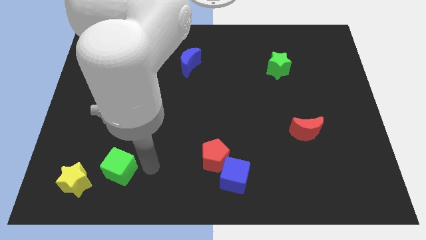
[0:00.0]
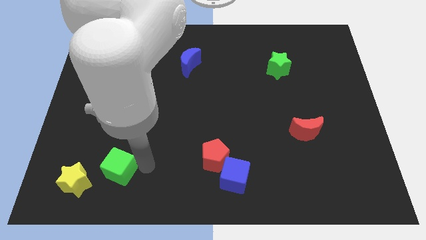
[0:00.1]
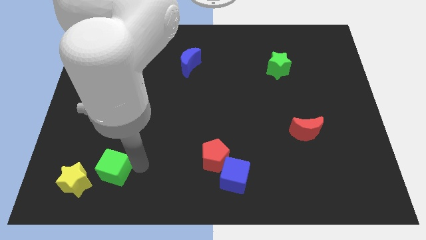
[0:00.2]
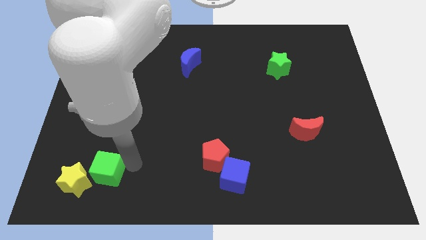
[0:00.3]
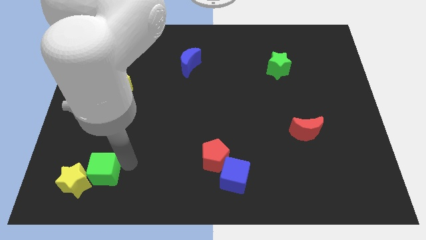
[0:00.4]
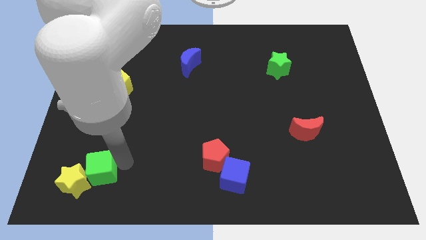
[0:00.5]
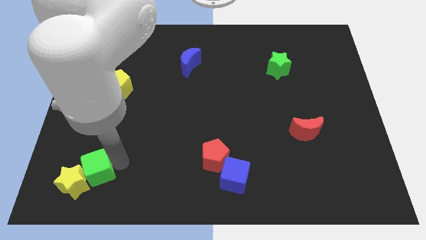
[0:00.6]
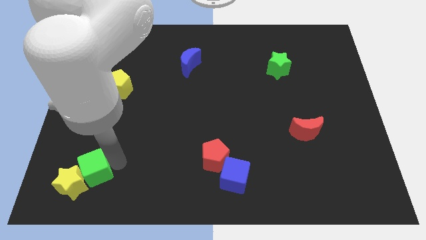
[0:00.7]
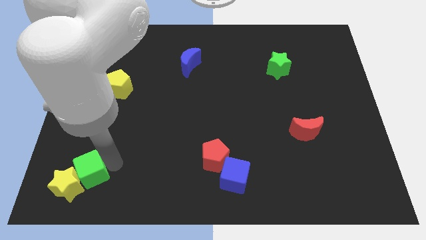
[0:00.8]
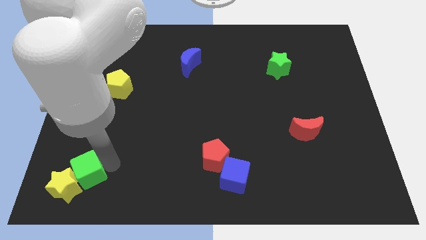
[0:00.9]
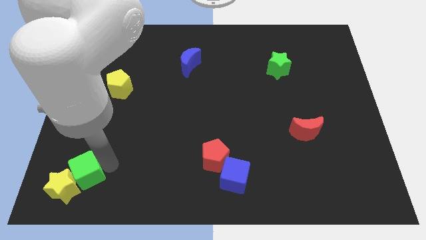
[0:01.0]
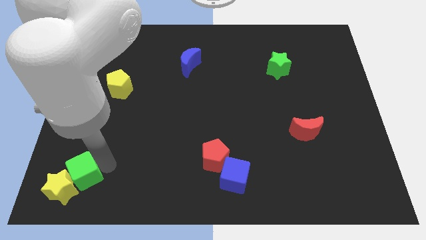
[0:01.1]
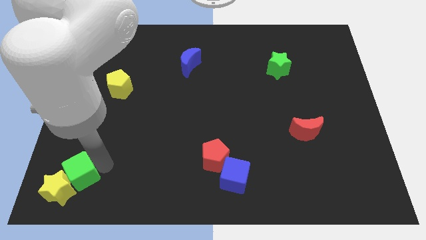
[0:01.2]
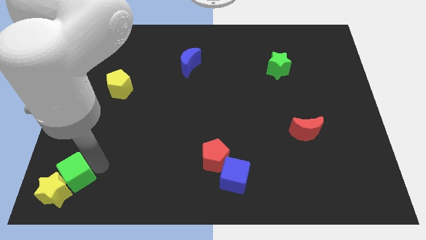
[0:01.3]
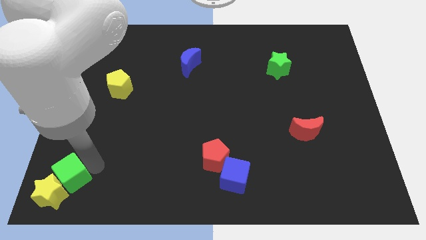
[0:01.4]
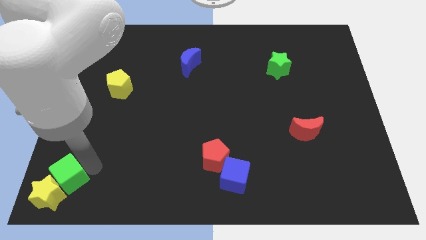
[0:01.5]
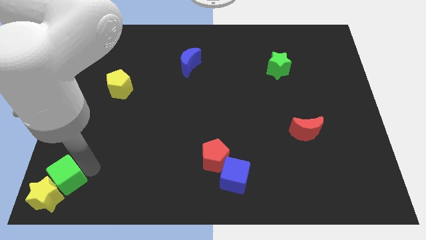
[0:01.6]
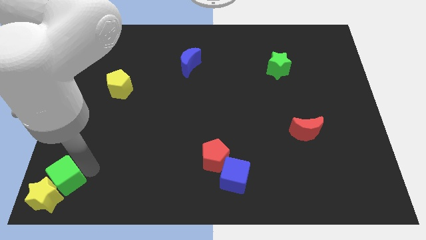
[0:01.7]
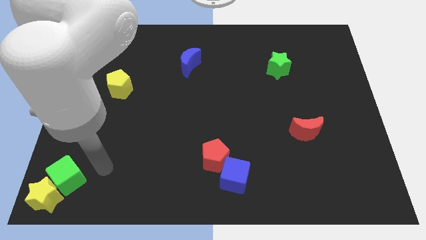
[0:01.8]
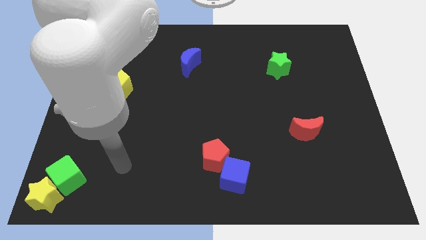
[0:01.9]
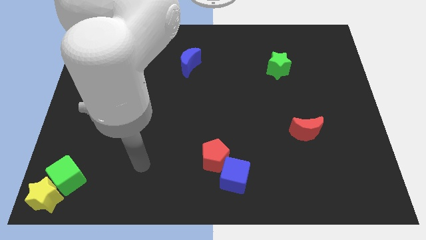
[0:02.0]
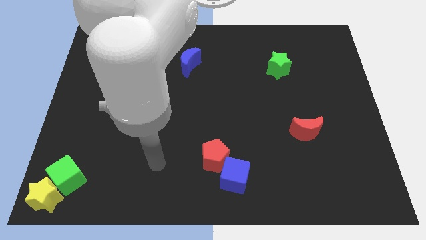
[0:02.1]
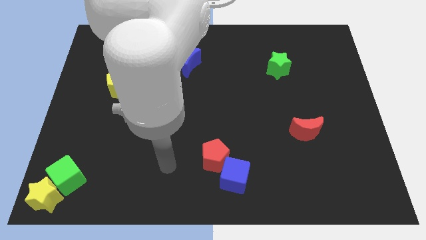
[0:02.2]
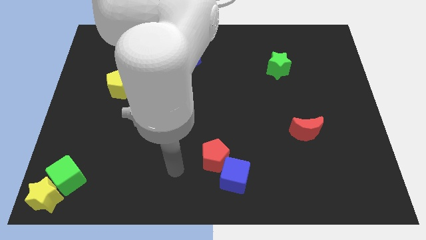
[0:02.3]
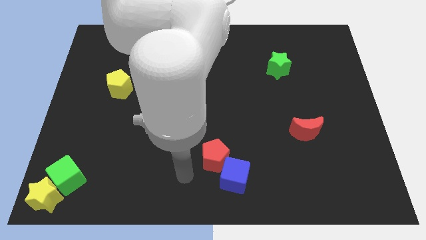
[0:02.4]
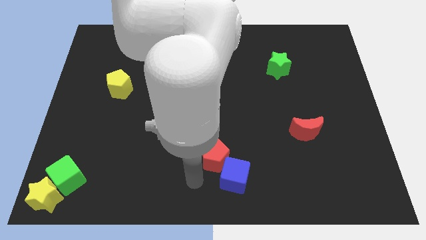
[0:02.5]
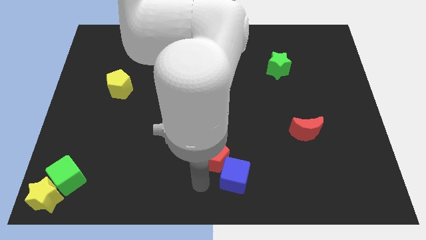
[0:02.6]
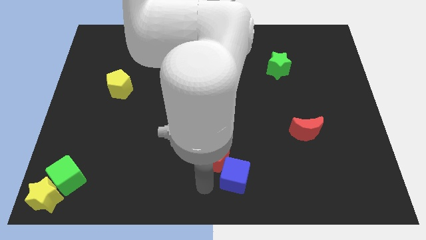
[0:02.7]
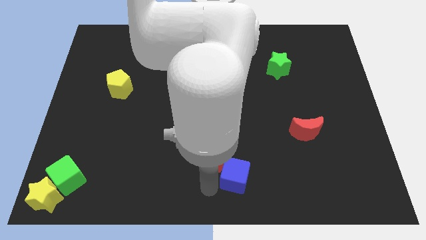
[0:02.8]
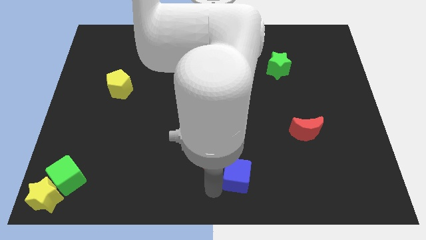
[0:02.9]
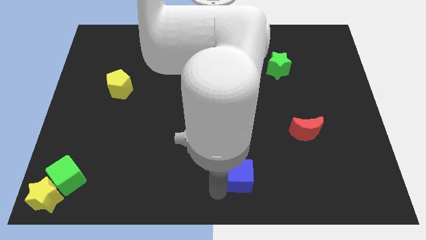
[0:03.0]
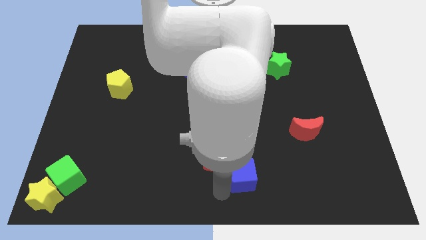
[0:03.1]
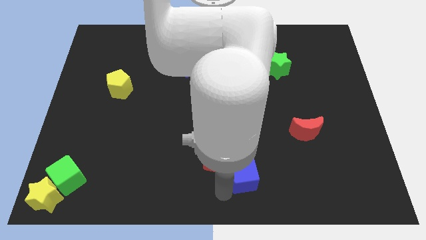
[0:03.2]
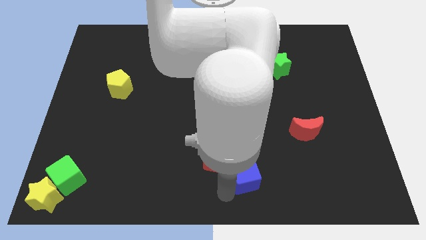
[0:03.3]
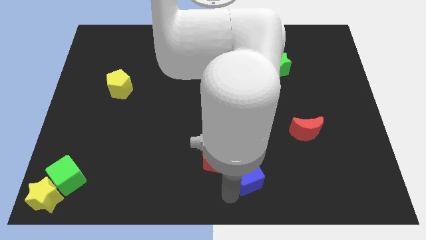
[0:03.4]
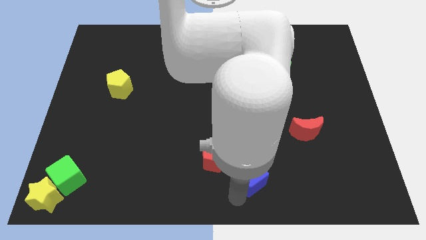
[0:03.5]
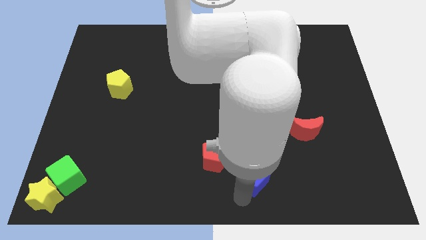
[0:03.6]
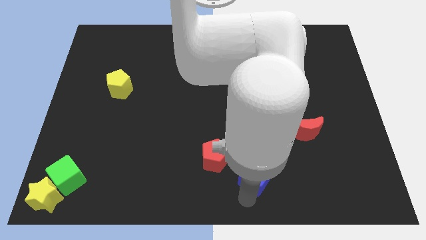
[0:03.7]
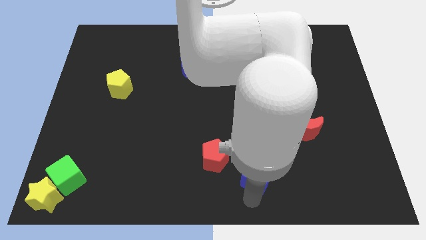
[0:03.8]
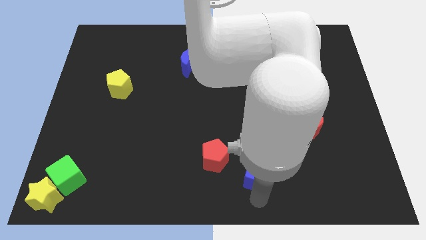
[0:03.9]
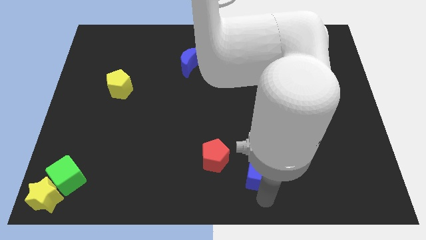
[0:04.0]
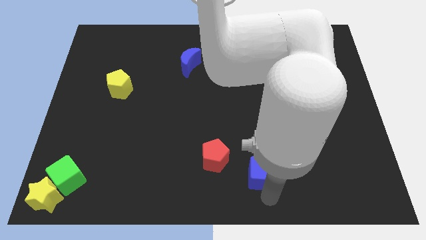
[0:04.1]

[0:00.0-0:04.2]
place the green cube and yellow star to the left bottom corner of the board

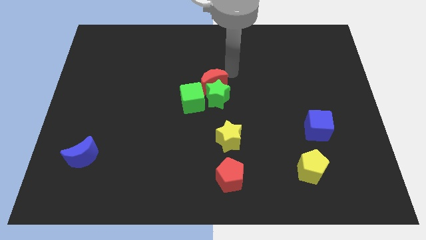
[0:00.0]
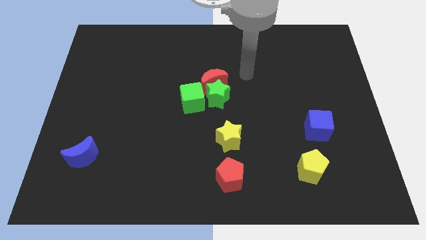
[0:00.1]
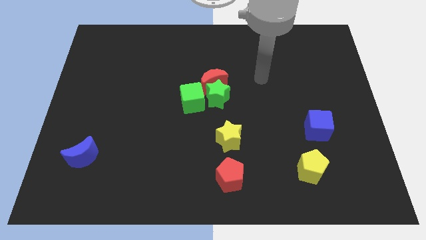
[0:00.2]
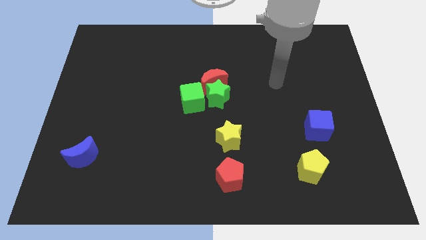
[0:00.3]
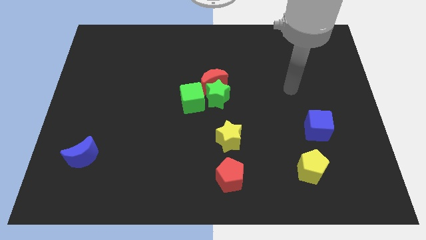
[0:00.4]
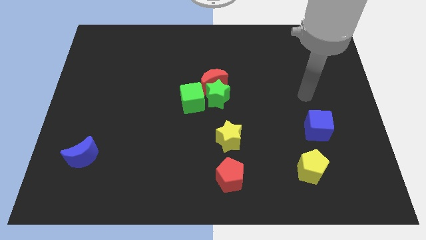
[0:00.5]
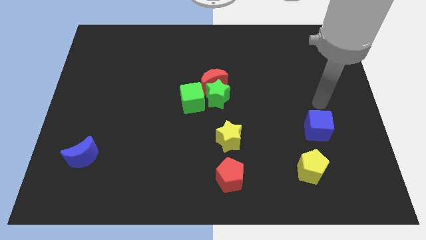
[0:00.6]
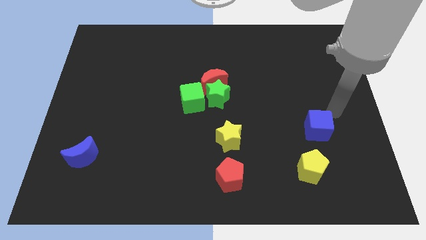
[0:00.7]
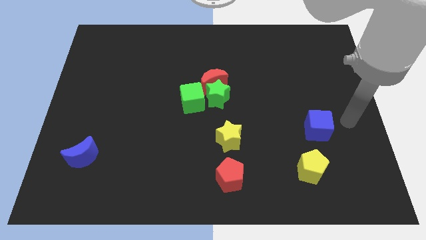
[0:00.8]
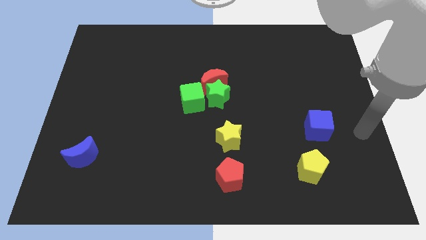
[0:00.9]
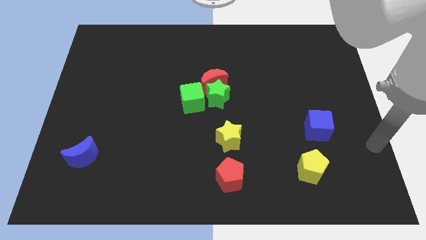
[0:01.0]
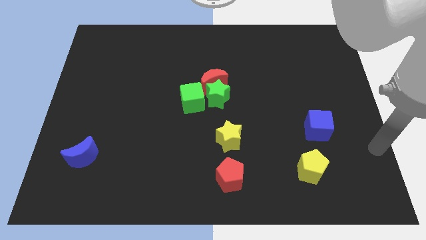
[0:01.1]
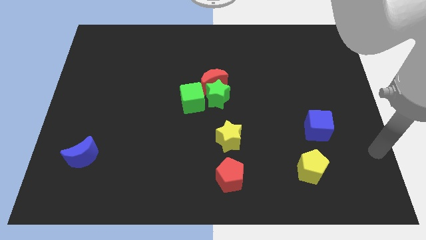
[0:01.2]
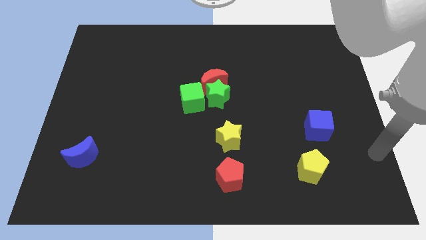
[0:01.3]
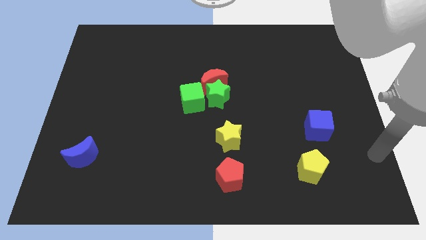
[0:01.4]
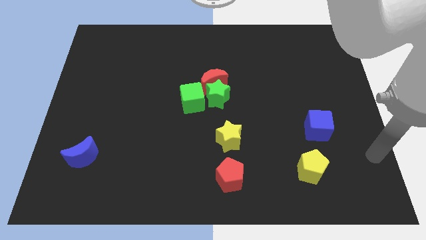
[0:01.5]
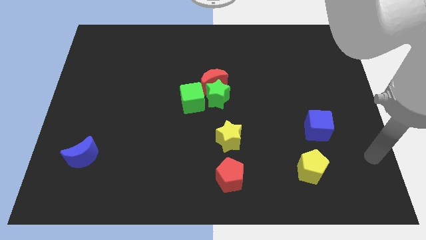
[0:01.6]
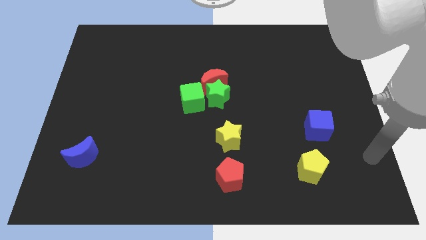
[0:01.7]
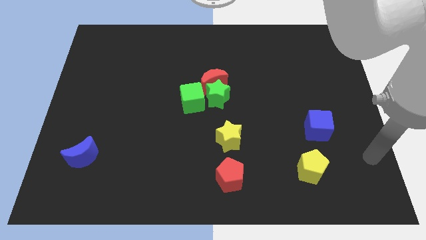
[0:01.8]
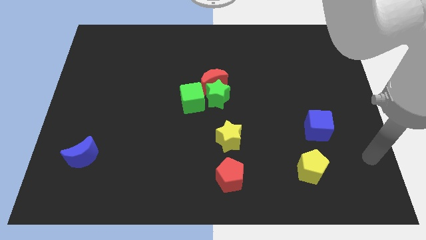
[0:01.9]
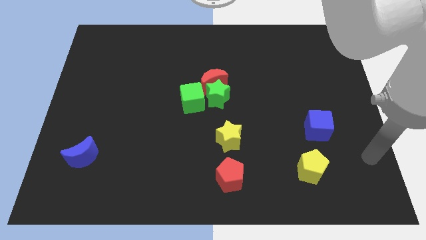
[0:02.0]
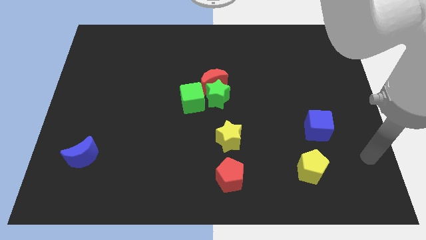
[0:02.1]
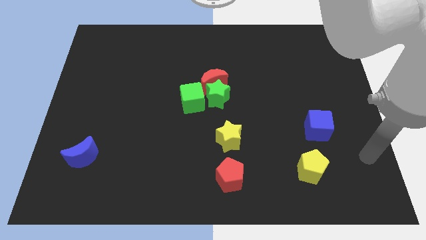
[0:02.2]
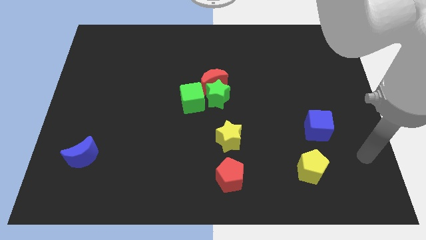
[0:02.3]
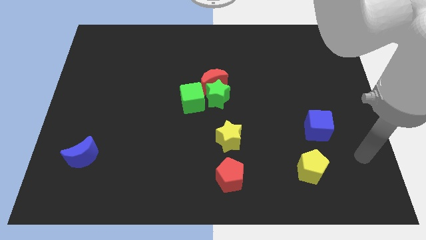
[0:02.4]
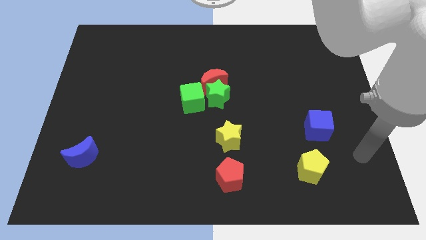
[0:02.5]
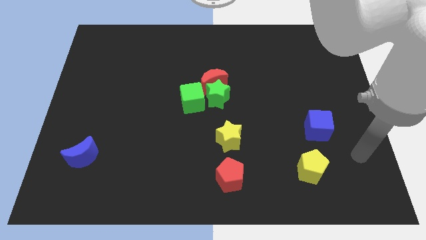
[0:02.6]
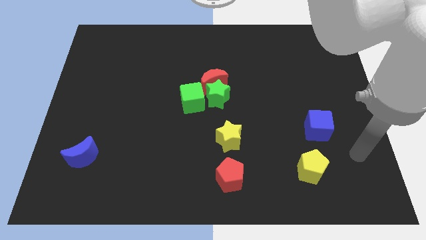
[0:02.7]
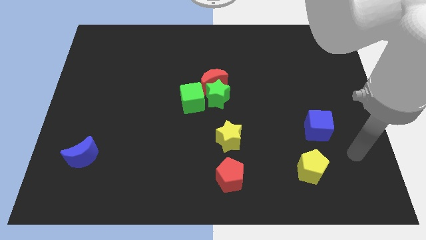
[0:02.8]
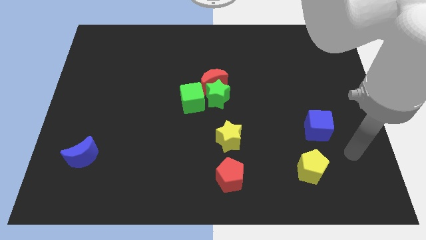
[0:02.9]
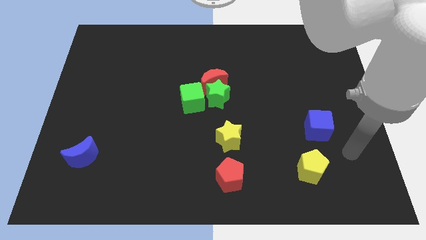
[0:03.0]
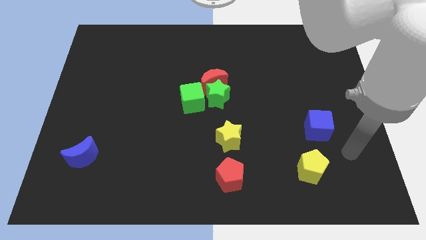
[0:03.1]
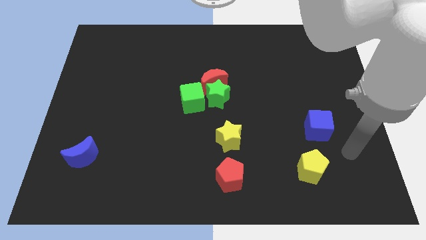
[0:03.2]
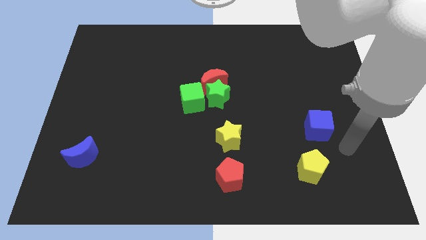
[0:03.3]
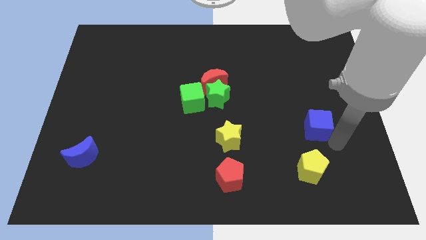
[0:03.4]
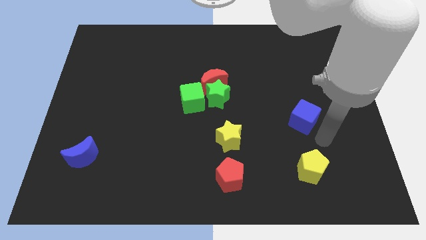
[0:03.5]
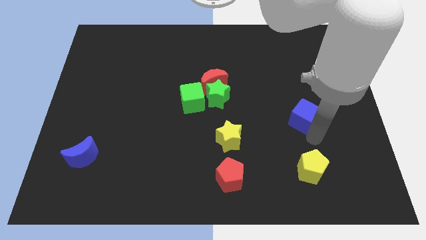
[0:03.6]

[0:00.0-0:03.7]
touch the arm down to the blue cube

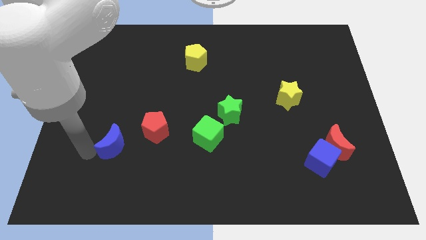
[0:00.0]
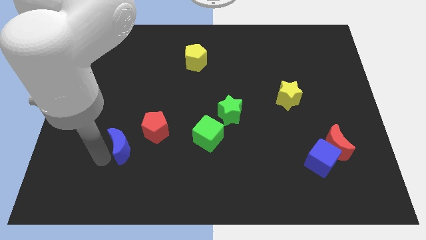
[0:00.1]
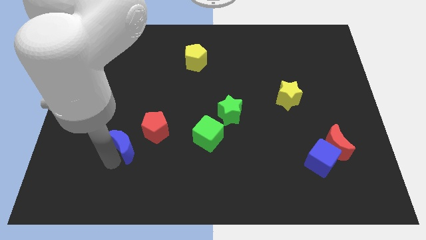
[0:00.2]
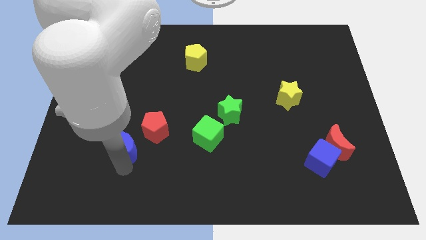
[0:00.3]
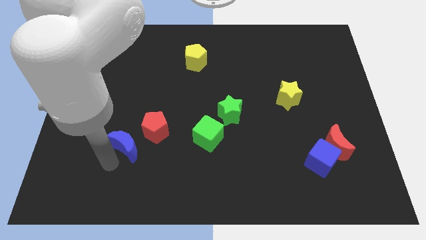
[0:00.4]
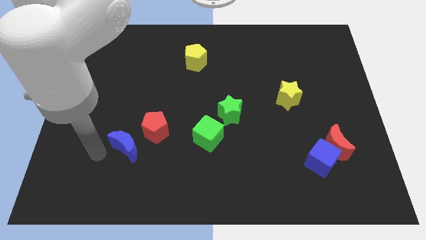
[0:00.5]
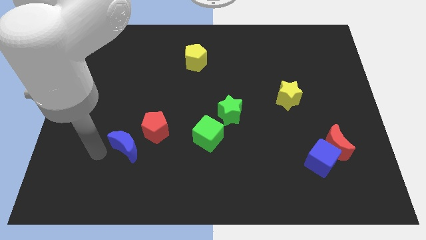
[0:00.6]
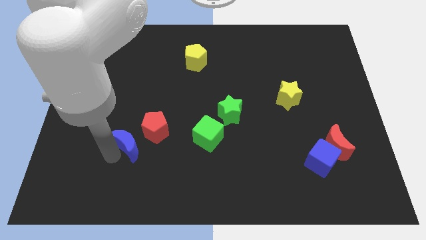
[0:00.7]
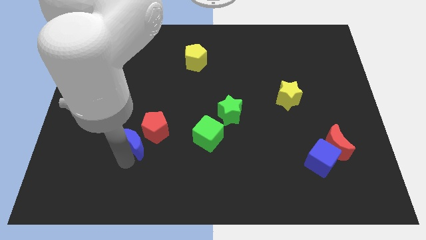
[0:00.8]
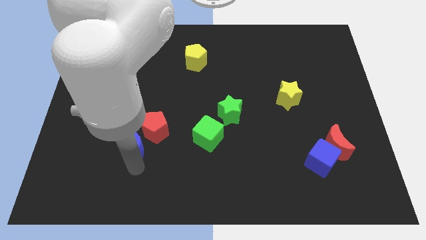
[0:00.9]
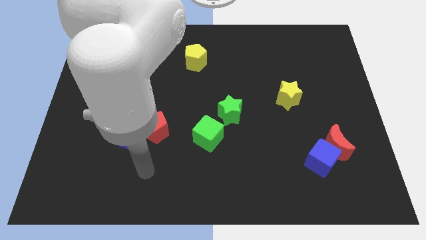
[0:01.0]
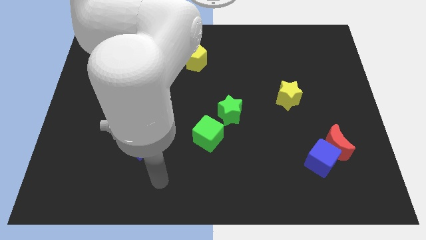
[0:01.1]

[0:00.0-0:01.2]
push the blue crescent closer to the red pentagon
